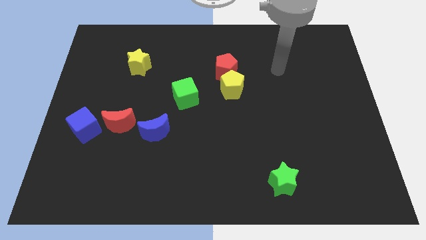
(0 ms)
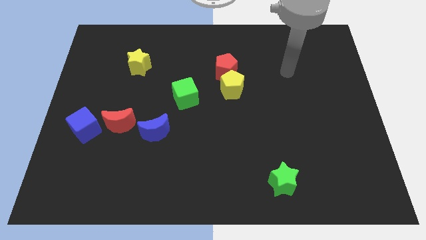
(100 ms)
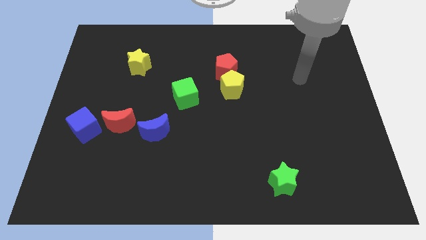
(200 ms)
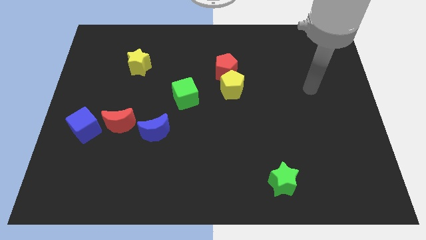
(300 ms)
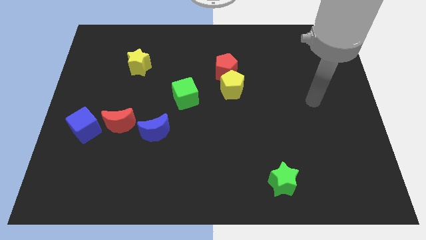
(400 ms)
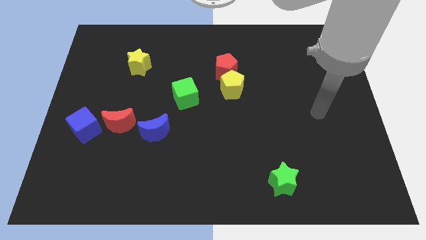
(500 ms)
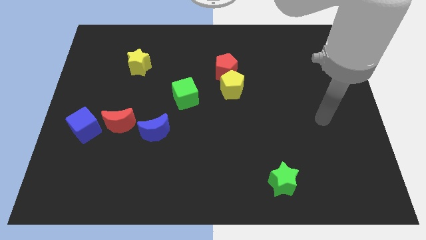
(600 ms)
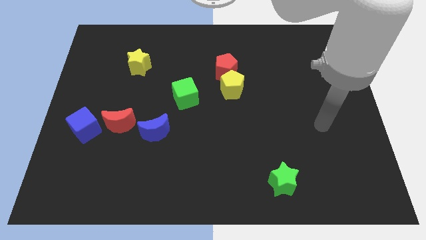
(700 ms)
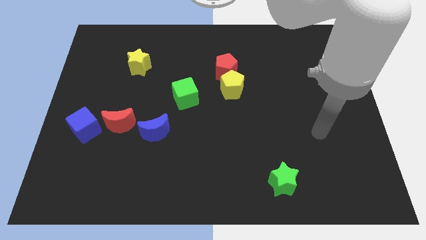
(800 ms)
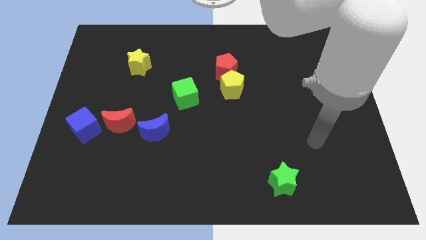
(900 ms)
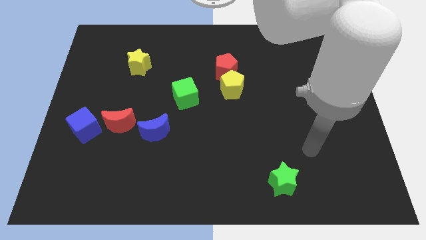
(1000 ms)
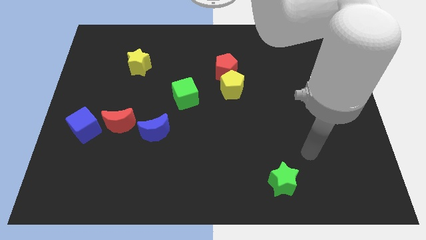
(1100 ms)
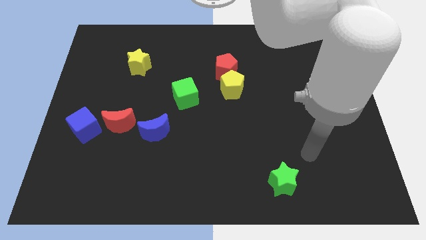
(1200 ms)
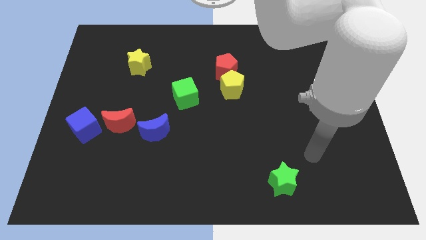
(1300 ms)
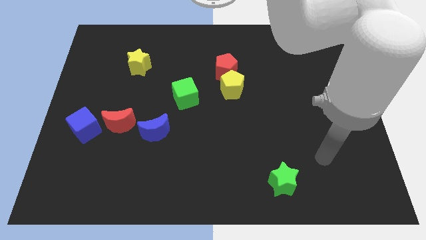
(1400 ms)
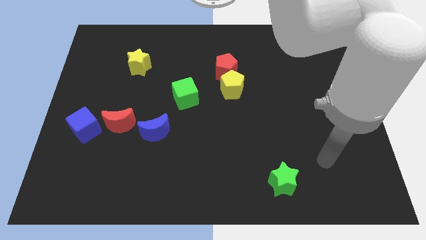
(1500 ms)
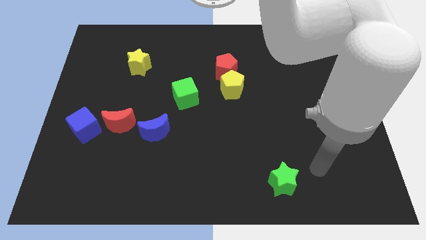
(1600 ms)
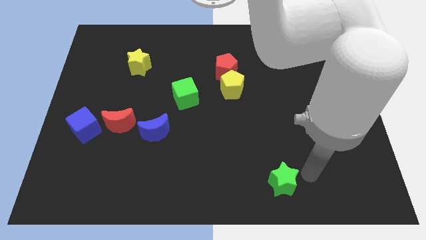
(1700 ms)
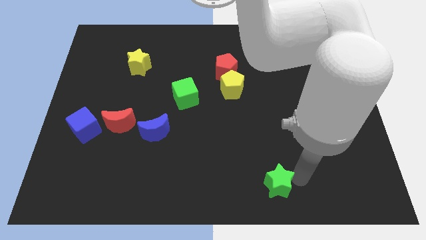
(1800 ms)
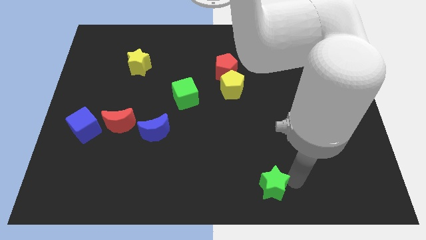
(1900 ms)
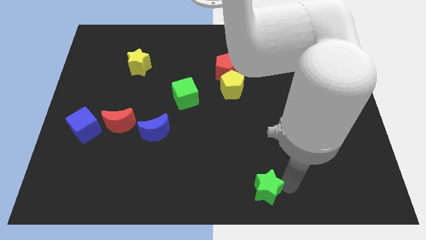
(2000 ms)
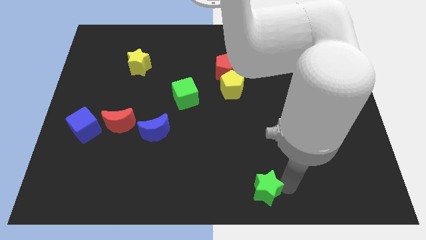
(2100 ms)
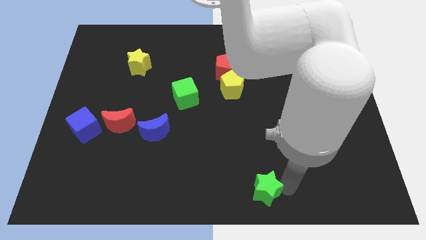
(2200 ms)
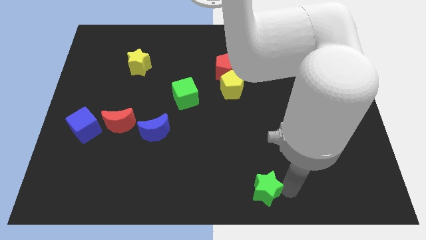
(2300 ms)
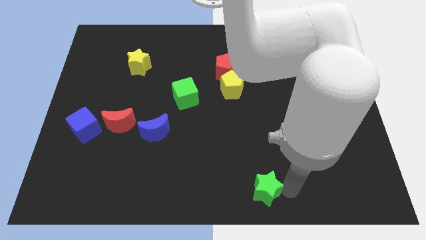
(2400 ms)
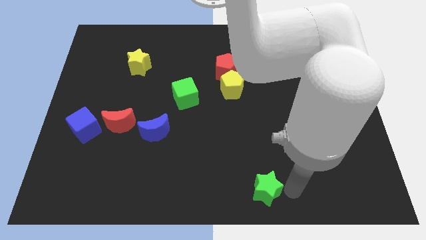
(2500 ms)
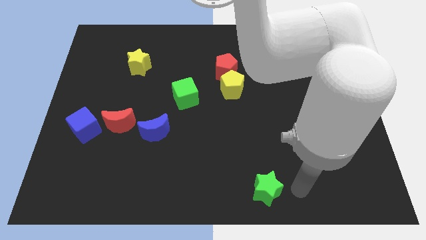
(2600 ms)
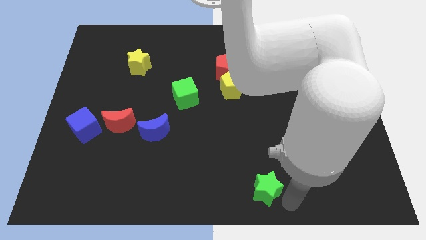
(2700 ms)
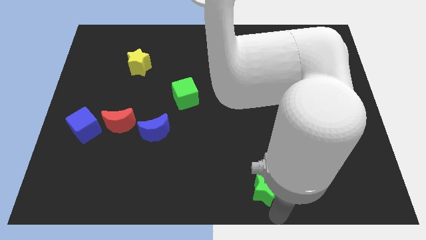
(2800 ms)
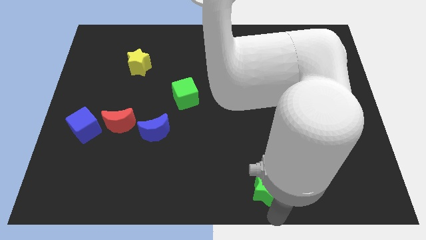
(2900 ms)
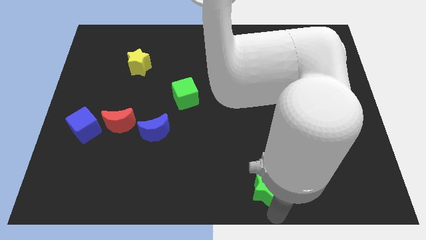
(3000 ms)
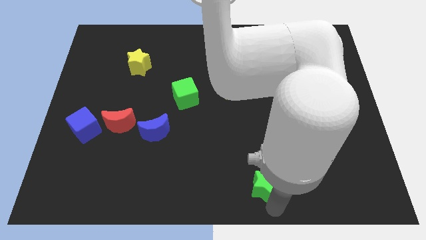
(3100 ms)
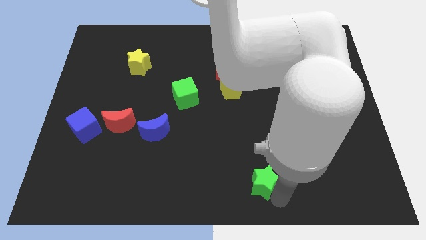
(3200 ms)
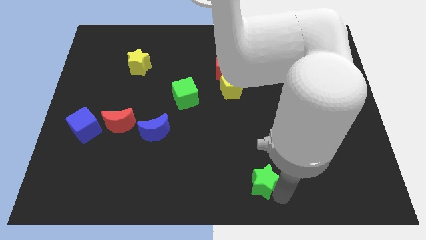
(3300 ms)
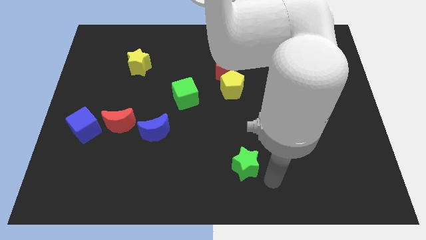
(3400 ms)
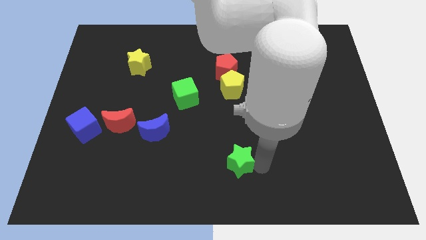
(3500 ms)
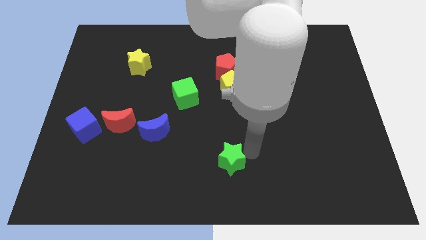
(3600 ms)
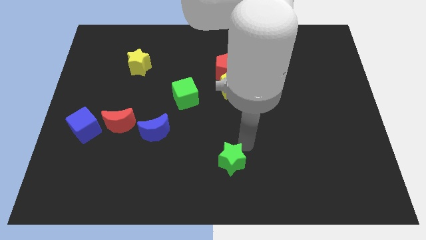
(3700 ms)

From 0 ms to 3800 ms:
put the green star vertically below the yellow pentagon

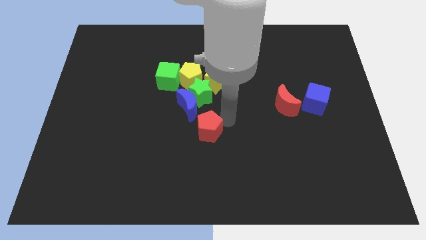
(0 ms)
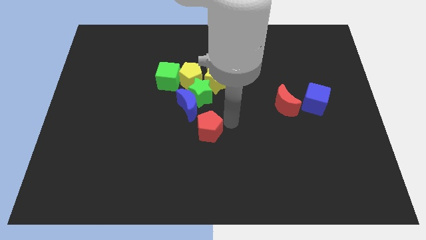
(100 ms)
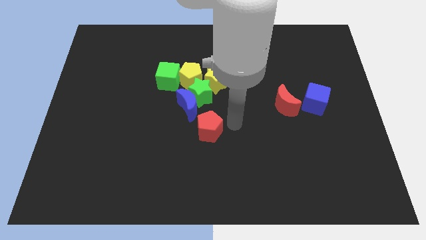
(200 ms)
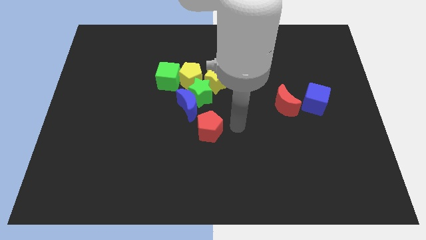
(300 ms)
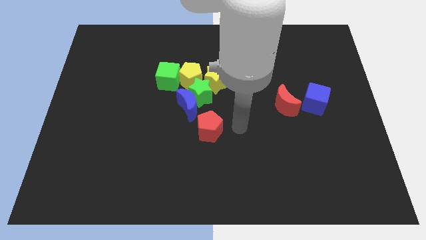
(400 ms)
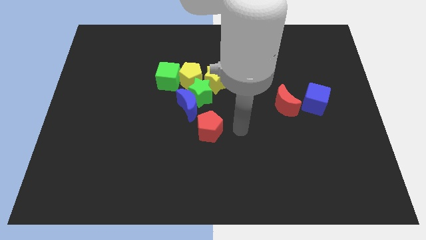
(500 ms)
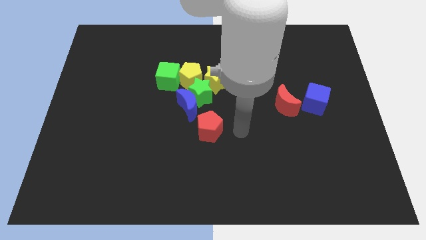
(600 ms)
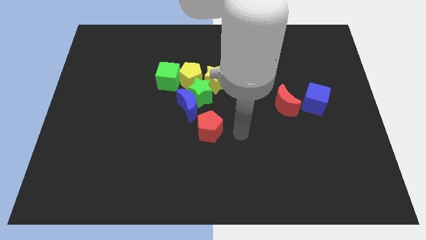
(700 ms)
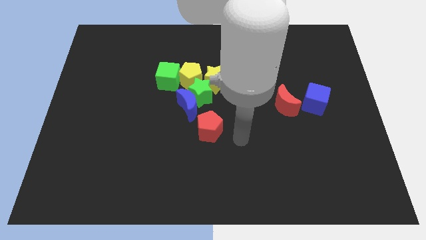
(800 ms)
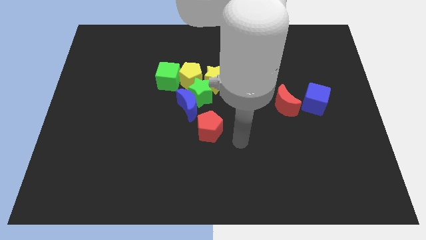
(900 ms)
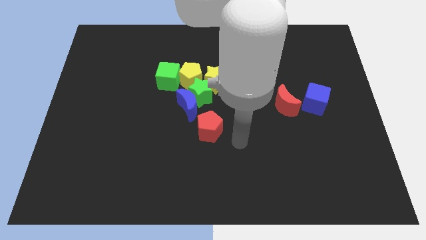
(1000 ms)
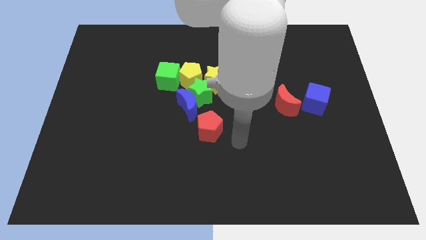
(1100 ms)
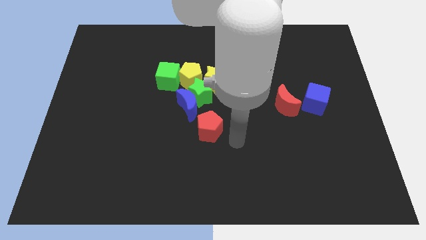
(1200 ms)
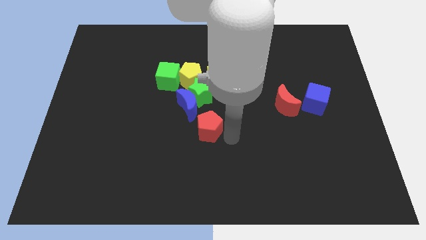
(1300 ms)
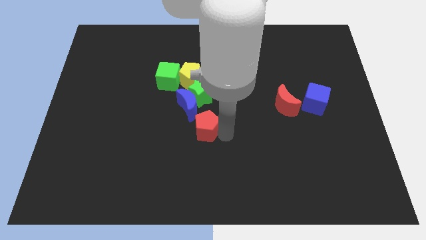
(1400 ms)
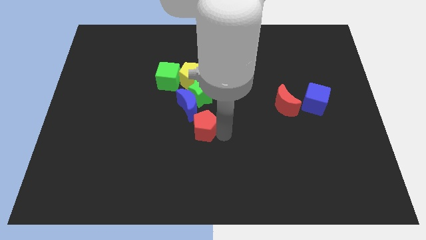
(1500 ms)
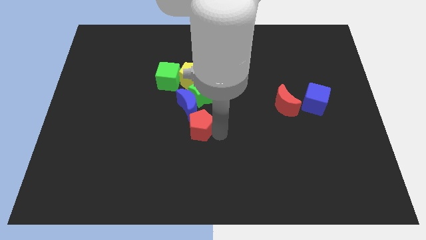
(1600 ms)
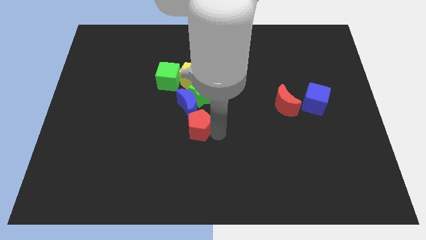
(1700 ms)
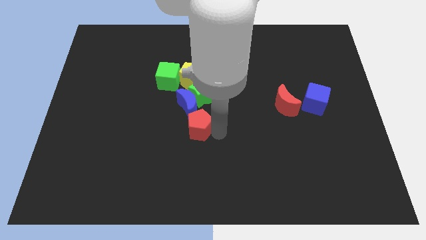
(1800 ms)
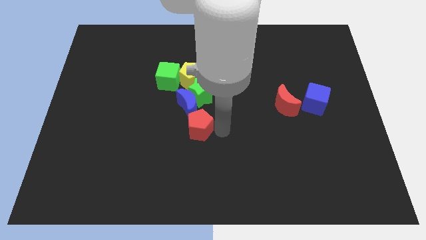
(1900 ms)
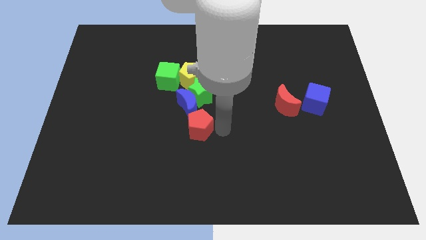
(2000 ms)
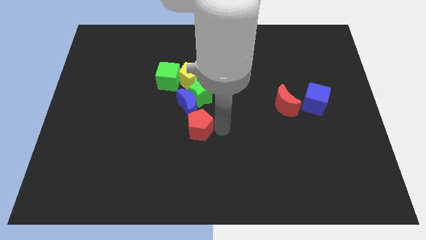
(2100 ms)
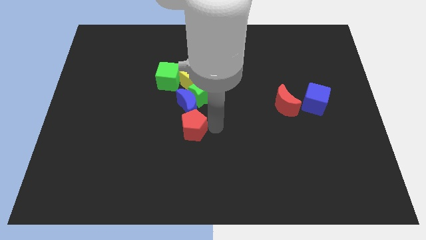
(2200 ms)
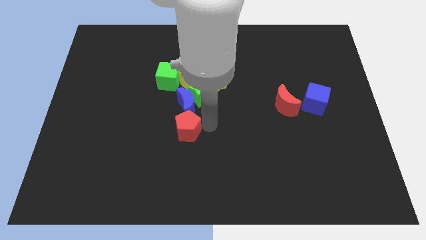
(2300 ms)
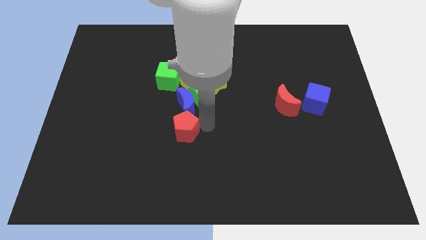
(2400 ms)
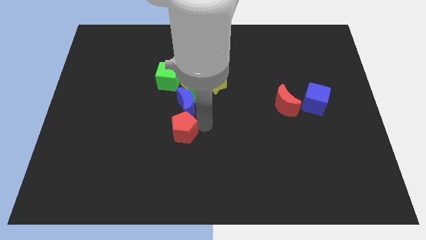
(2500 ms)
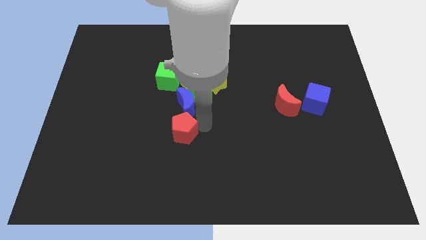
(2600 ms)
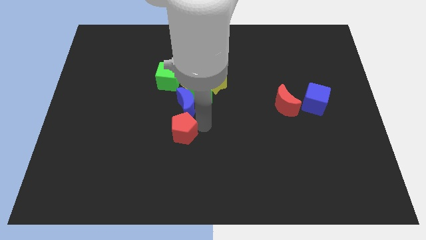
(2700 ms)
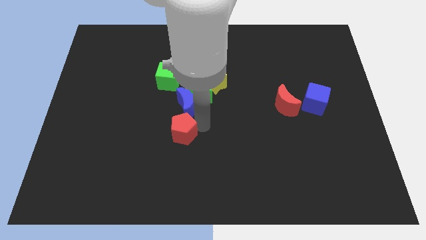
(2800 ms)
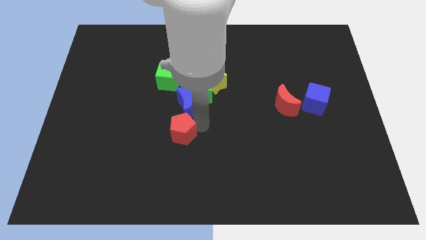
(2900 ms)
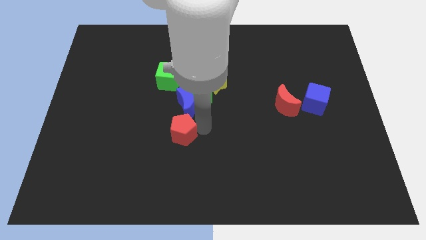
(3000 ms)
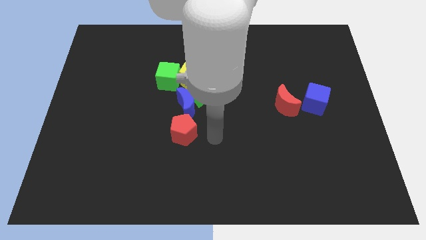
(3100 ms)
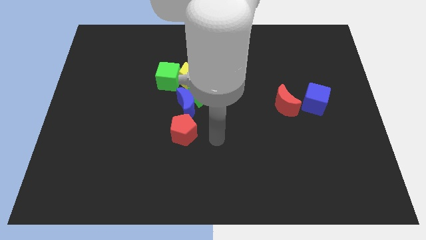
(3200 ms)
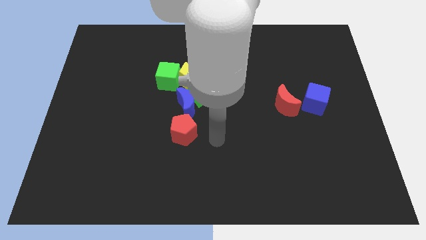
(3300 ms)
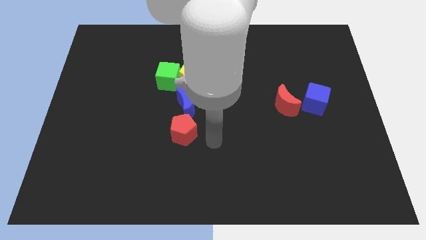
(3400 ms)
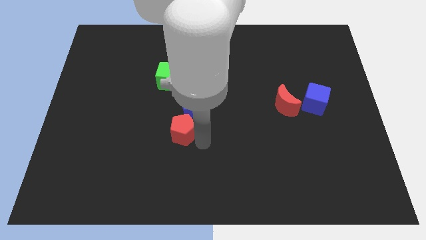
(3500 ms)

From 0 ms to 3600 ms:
slide the red pentagon slightly towards left

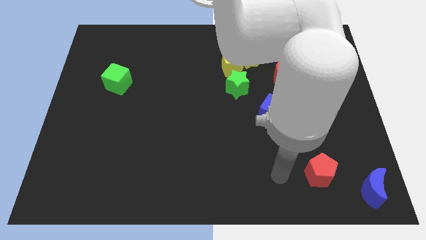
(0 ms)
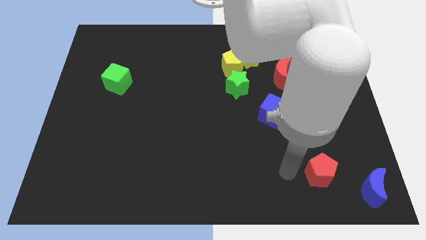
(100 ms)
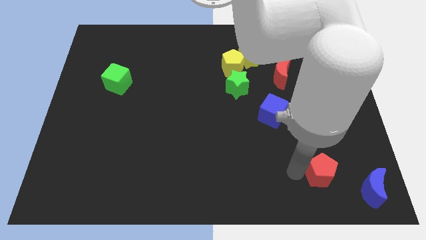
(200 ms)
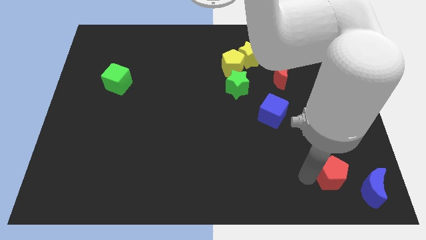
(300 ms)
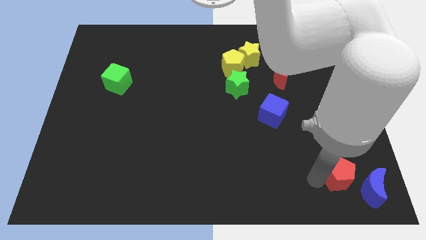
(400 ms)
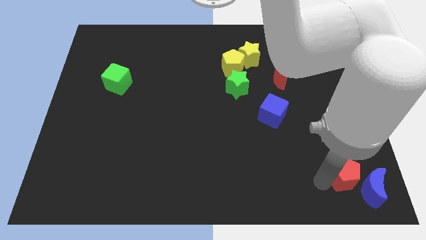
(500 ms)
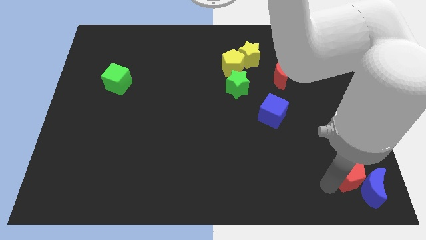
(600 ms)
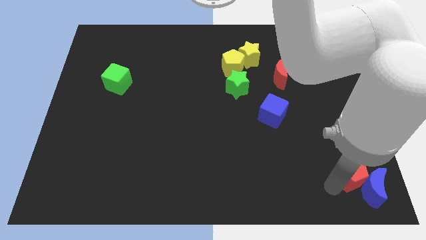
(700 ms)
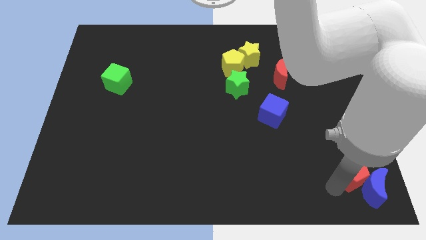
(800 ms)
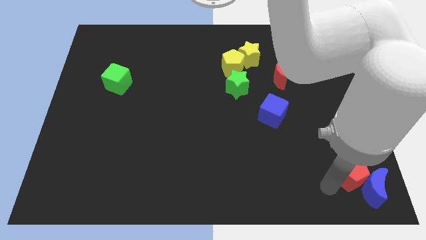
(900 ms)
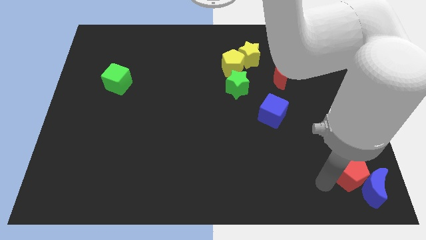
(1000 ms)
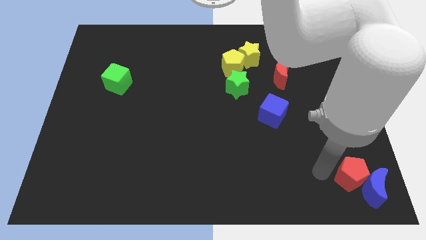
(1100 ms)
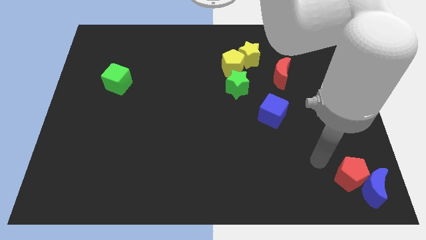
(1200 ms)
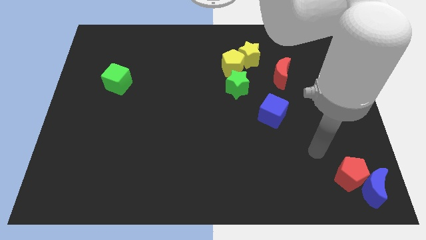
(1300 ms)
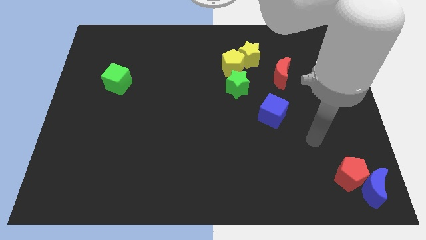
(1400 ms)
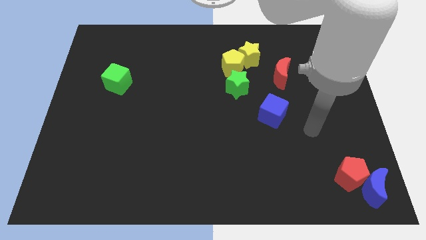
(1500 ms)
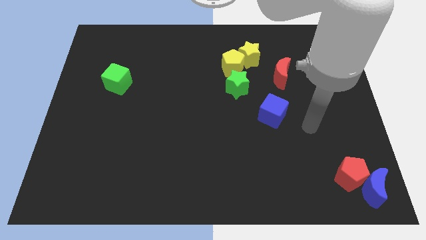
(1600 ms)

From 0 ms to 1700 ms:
place the red pentagon to the left of the blue moon
